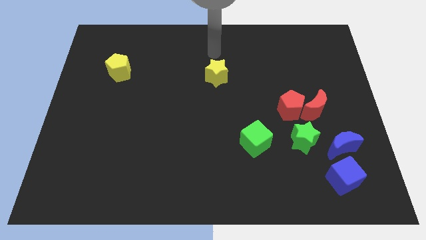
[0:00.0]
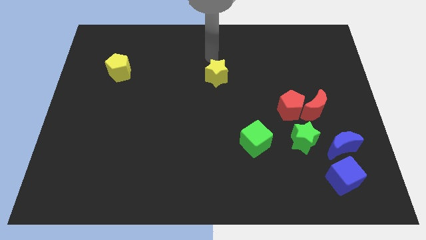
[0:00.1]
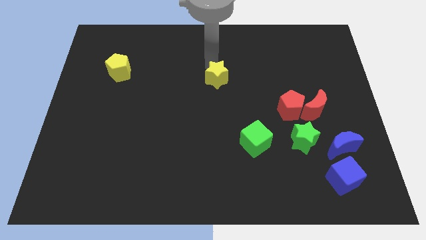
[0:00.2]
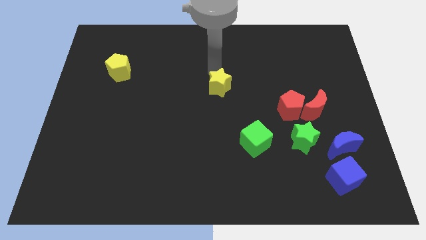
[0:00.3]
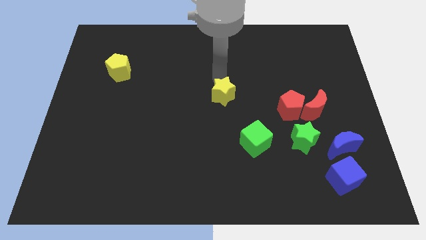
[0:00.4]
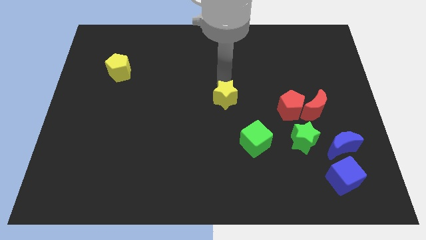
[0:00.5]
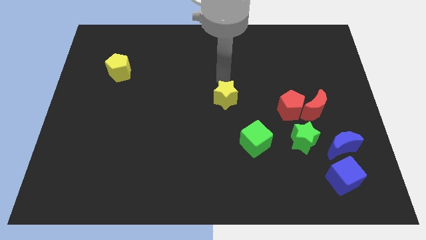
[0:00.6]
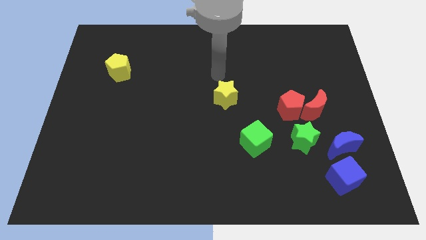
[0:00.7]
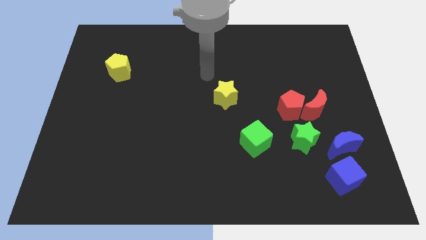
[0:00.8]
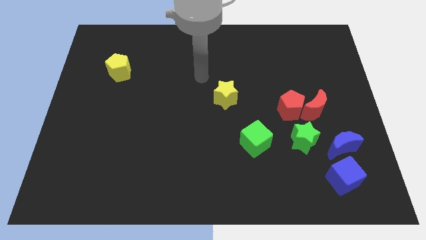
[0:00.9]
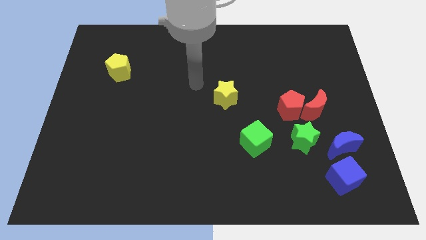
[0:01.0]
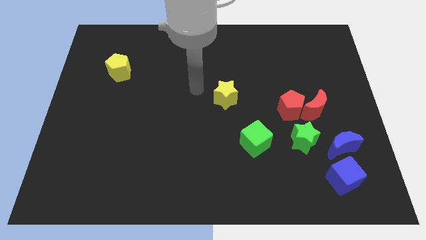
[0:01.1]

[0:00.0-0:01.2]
push the yellow star towards green cube

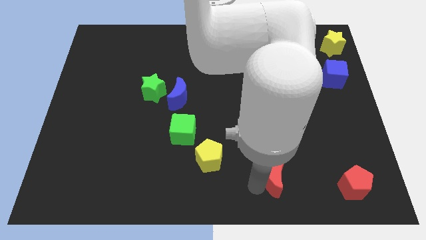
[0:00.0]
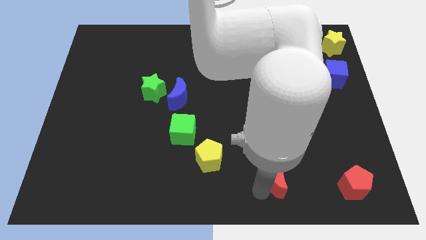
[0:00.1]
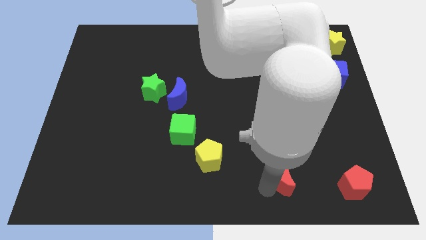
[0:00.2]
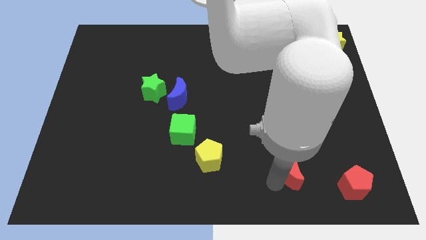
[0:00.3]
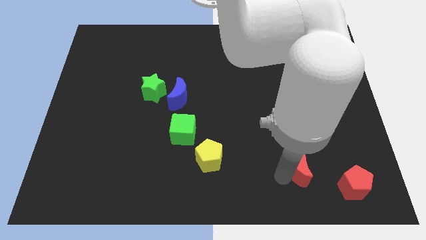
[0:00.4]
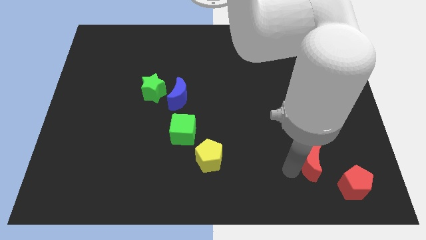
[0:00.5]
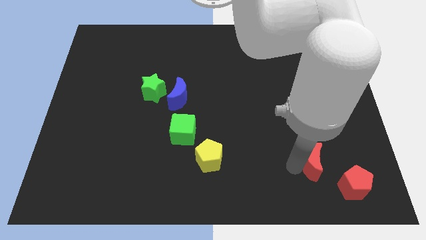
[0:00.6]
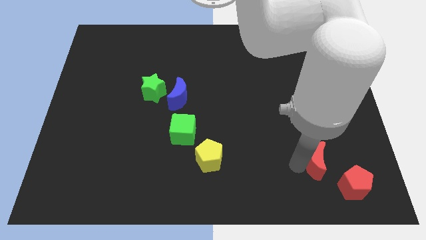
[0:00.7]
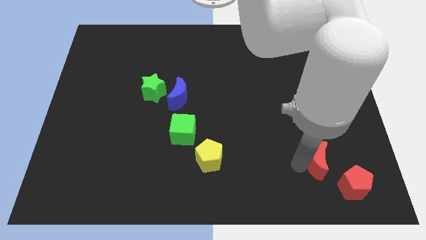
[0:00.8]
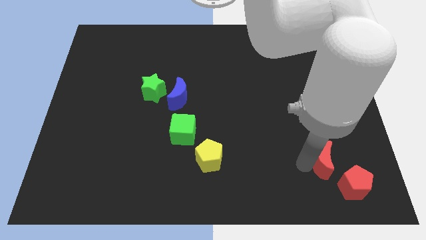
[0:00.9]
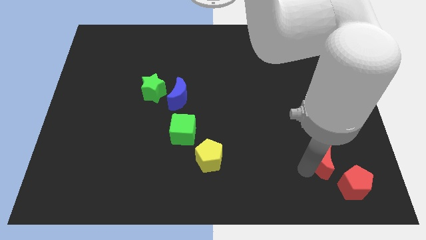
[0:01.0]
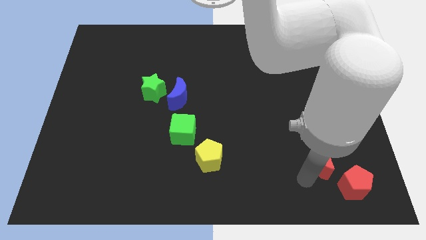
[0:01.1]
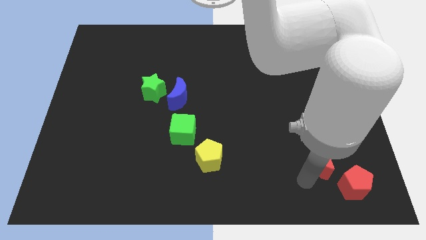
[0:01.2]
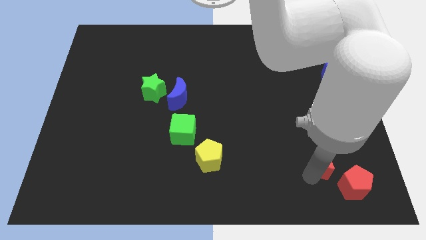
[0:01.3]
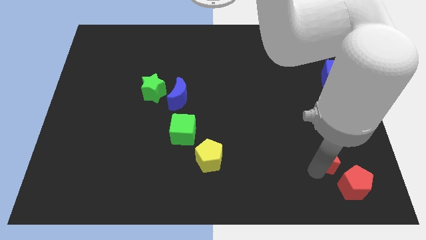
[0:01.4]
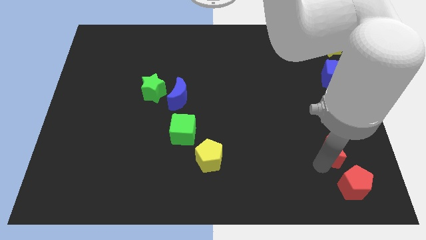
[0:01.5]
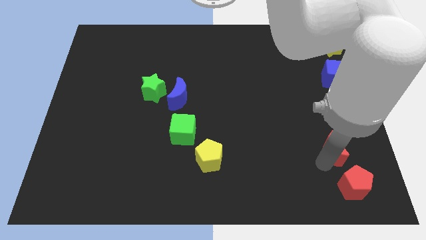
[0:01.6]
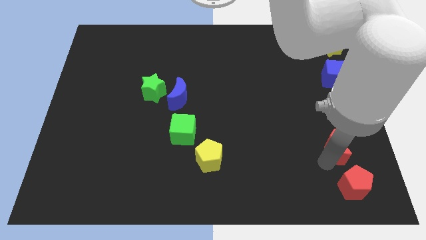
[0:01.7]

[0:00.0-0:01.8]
place red moon above the red pentagon

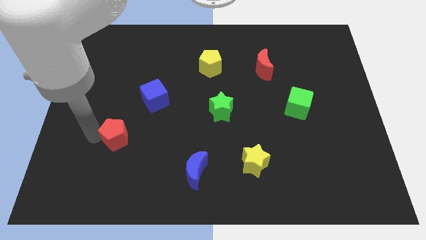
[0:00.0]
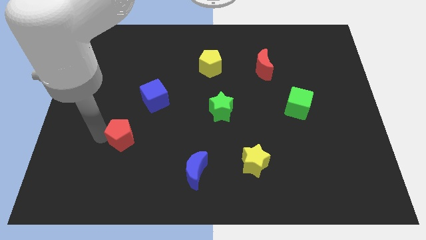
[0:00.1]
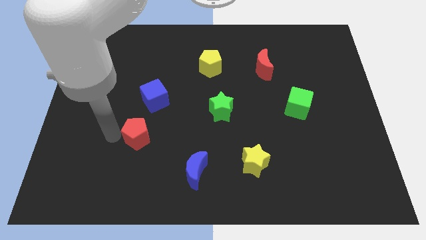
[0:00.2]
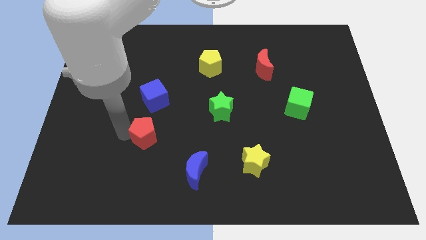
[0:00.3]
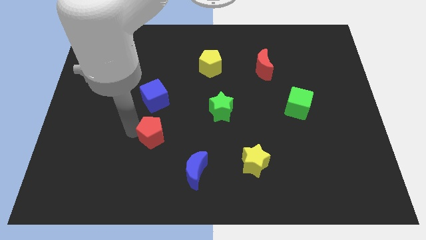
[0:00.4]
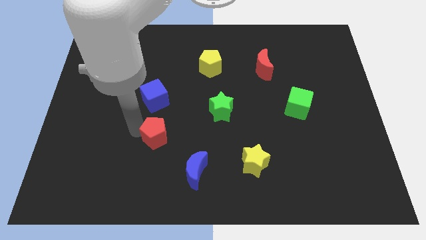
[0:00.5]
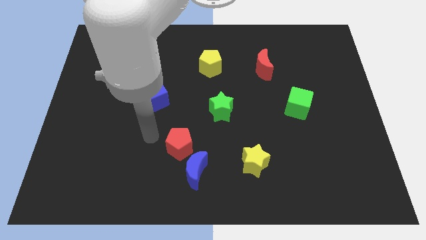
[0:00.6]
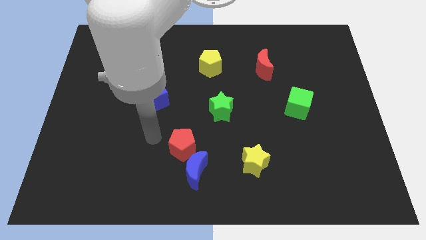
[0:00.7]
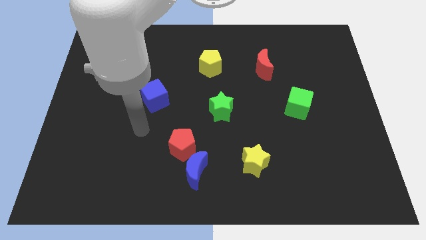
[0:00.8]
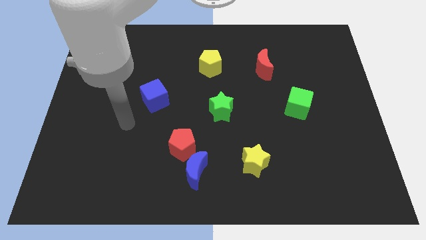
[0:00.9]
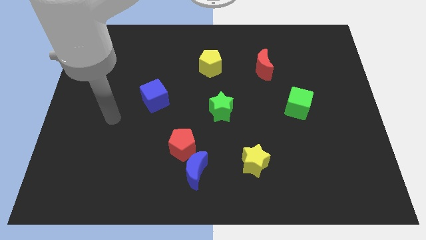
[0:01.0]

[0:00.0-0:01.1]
move red pentagon into blue moon

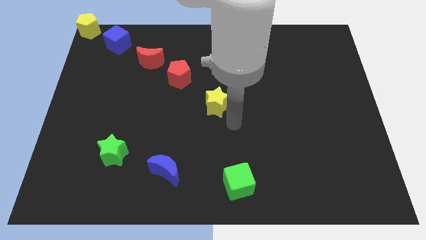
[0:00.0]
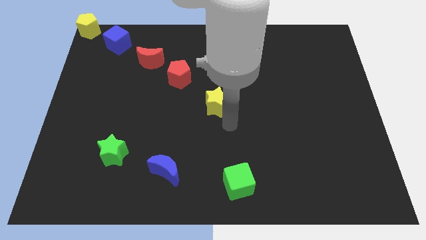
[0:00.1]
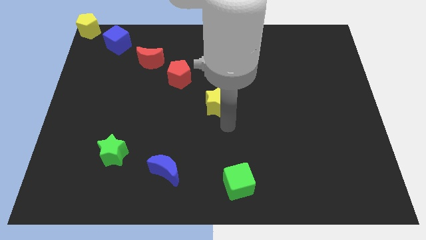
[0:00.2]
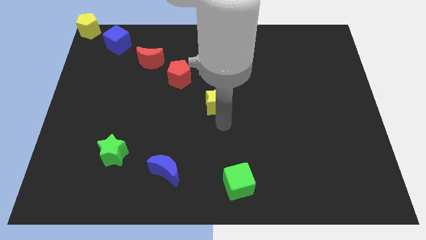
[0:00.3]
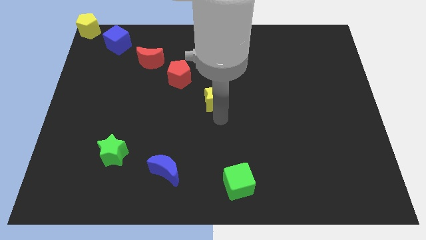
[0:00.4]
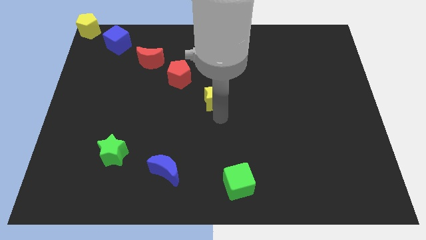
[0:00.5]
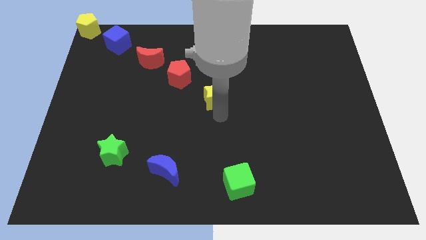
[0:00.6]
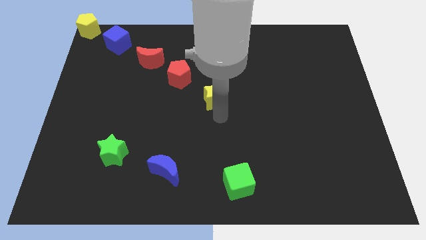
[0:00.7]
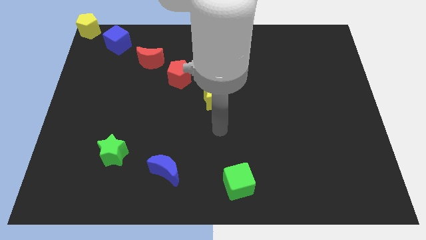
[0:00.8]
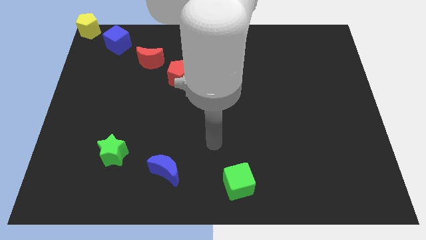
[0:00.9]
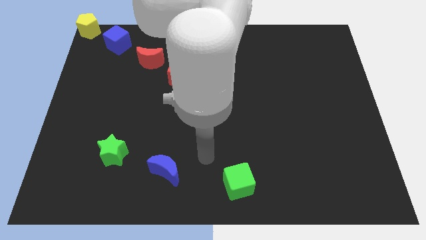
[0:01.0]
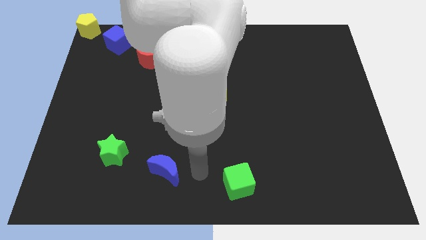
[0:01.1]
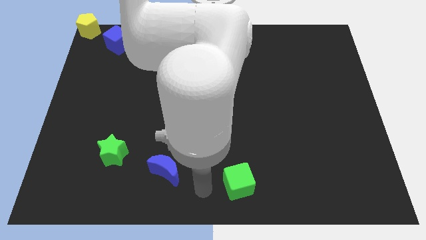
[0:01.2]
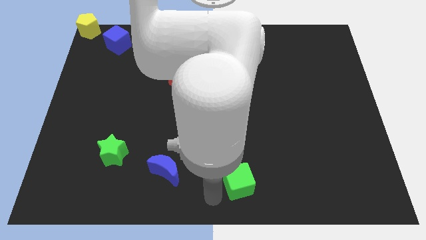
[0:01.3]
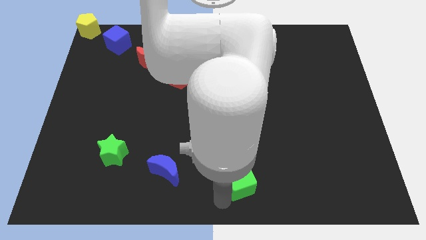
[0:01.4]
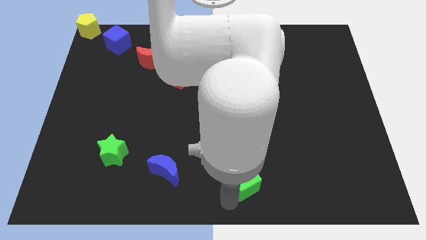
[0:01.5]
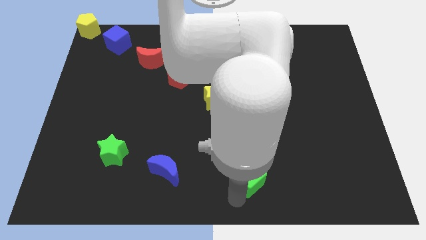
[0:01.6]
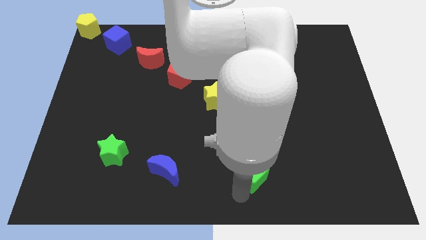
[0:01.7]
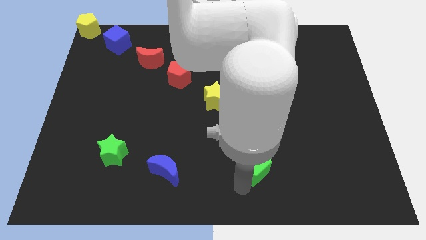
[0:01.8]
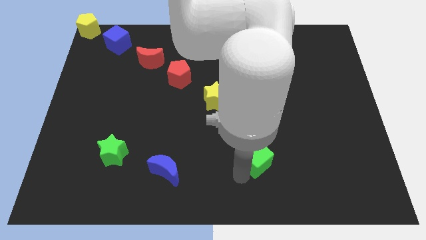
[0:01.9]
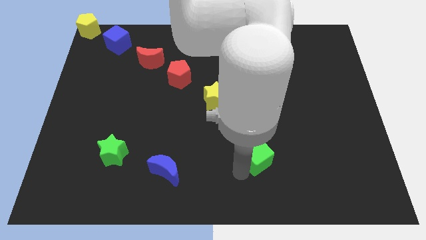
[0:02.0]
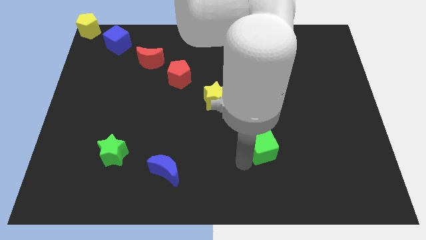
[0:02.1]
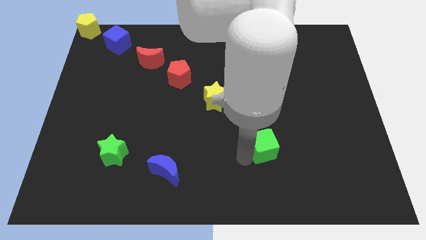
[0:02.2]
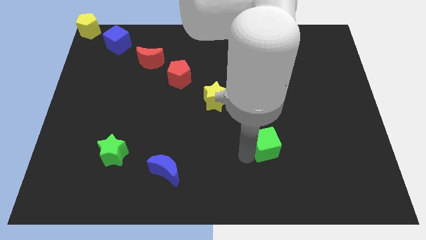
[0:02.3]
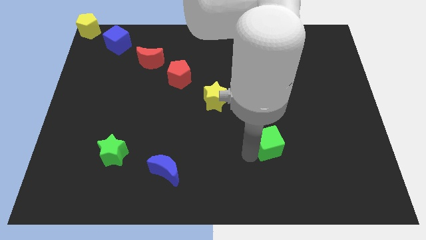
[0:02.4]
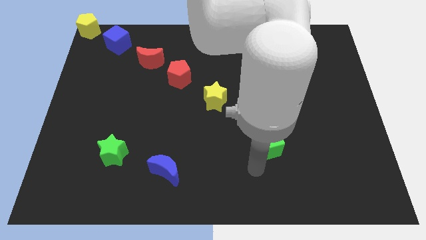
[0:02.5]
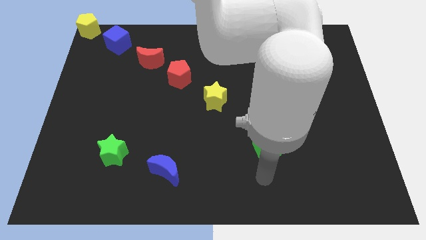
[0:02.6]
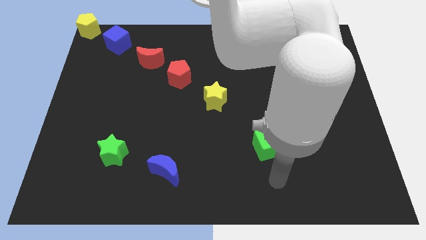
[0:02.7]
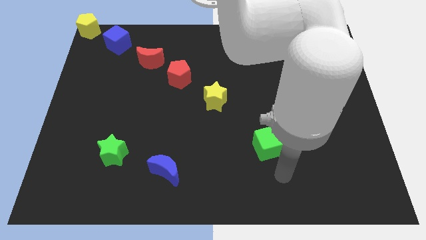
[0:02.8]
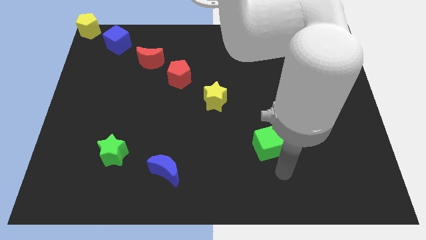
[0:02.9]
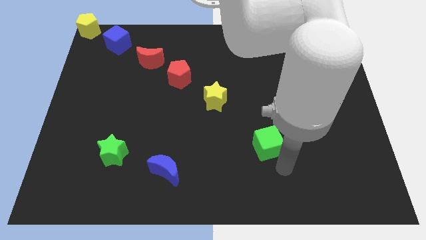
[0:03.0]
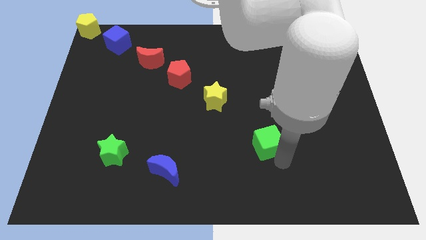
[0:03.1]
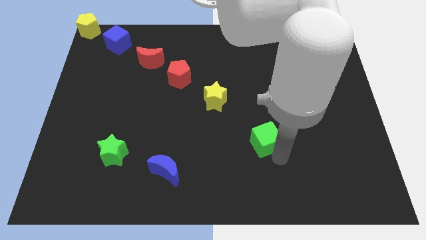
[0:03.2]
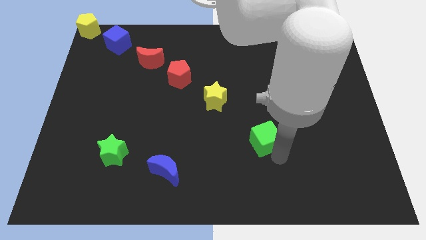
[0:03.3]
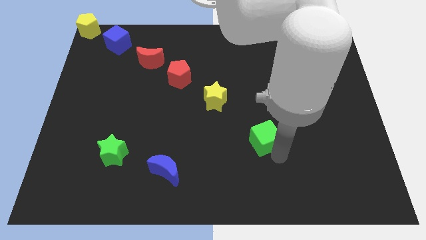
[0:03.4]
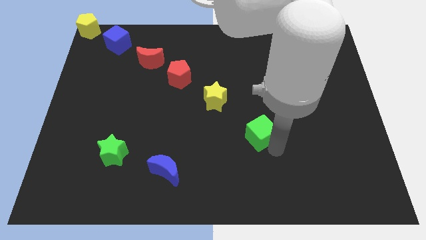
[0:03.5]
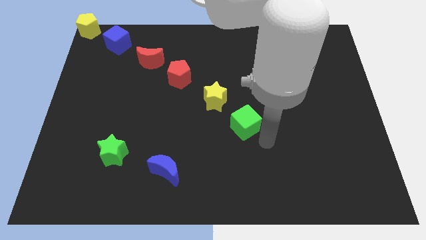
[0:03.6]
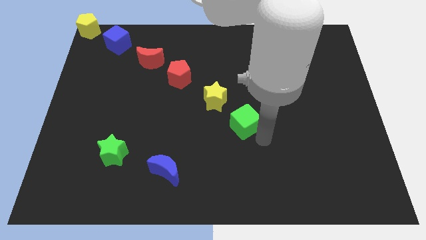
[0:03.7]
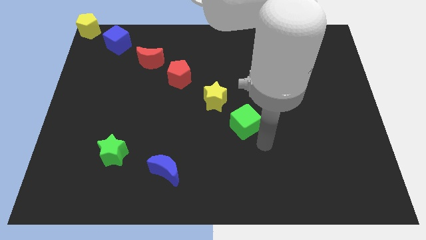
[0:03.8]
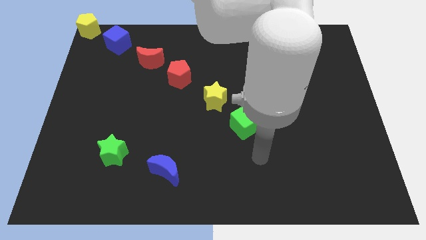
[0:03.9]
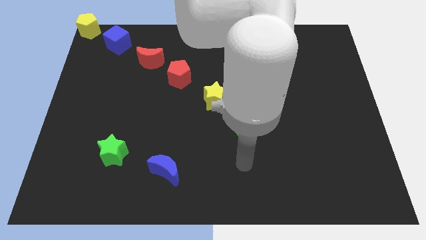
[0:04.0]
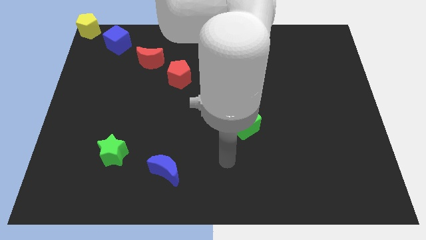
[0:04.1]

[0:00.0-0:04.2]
move the green cube to the bottom right of yellow star

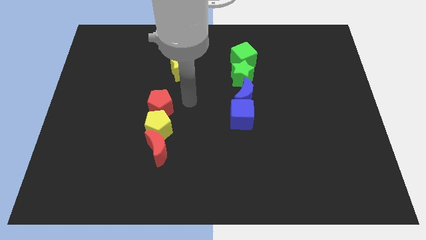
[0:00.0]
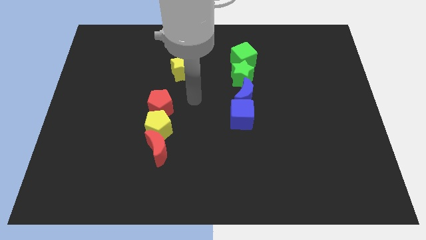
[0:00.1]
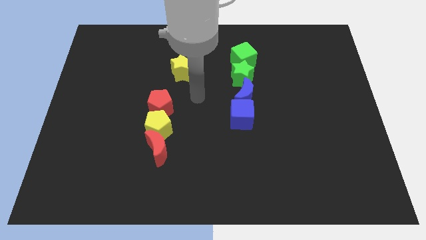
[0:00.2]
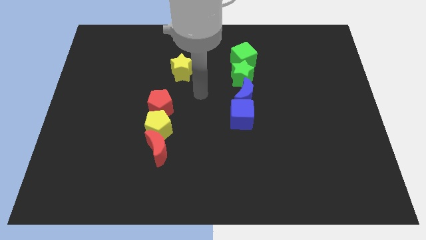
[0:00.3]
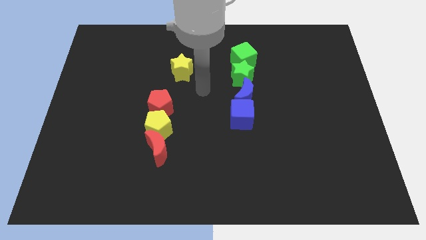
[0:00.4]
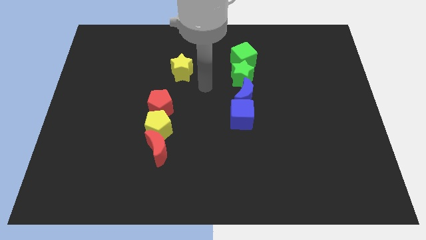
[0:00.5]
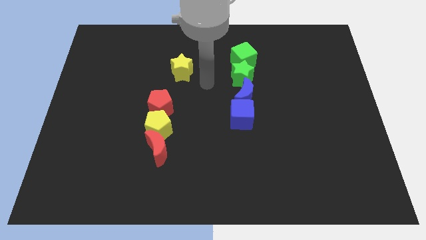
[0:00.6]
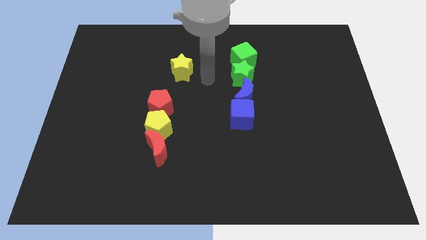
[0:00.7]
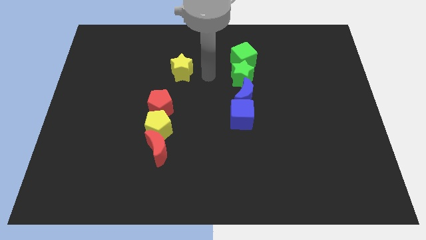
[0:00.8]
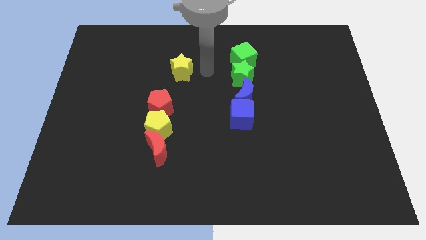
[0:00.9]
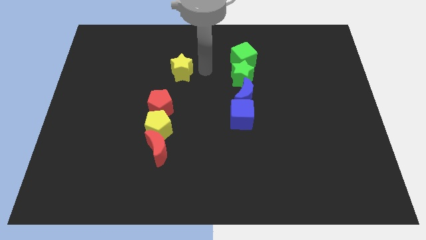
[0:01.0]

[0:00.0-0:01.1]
point the arm in between the green cube and the yellow star
